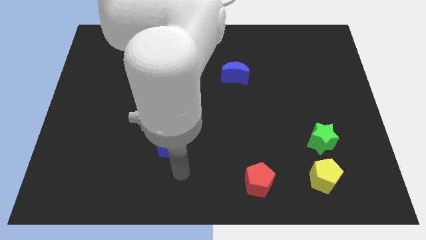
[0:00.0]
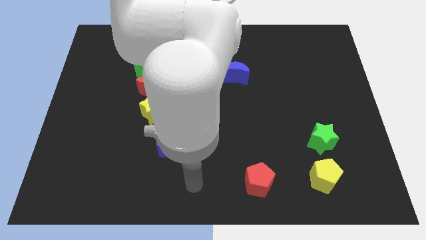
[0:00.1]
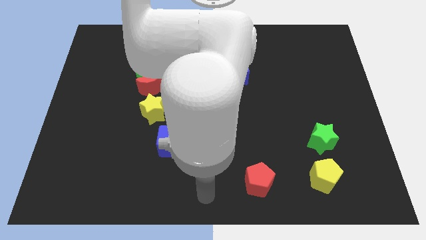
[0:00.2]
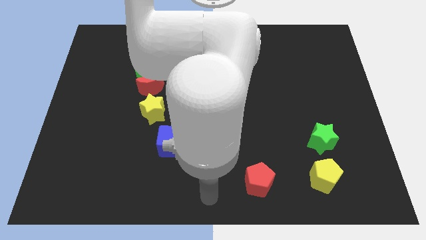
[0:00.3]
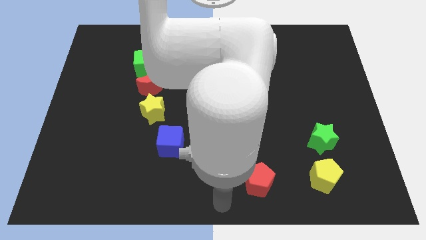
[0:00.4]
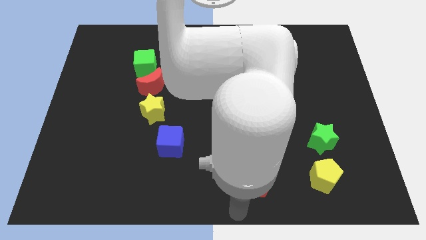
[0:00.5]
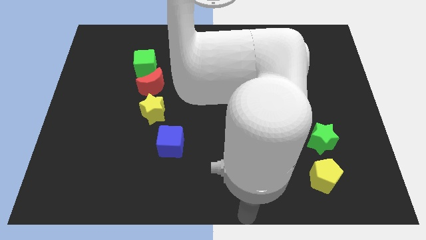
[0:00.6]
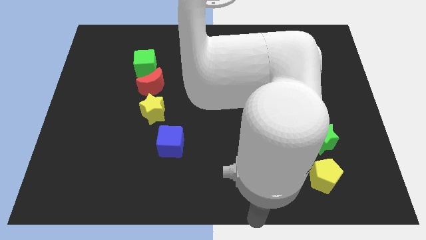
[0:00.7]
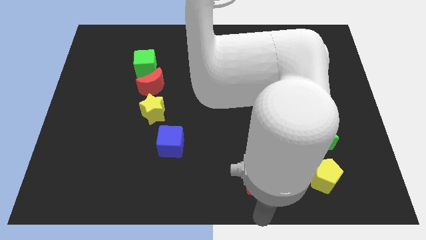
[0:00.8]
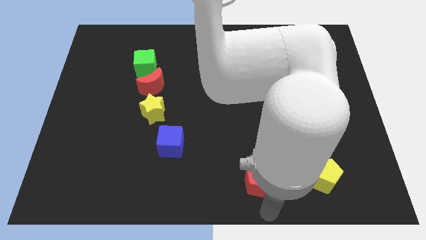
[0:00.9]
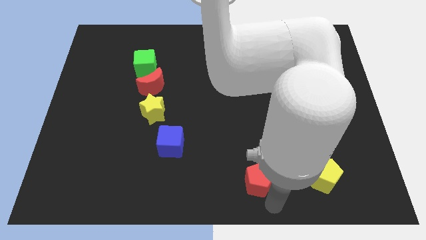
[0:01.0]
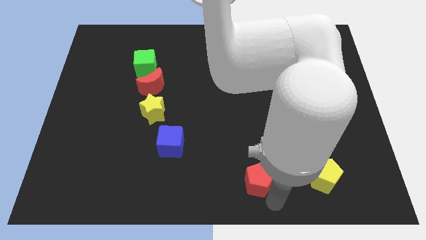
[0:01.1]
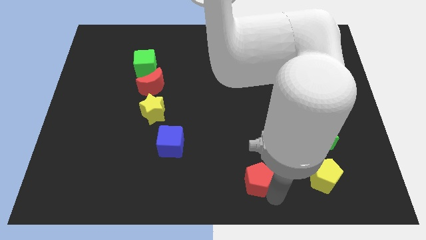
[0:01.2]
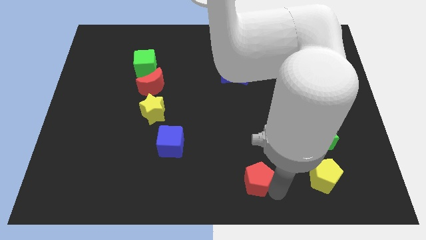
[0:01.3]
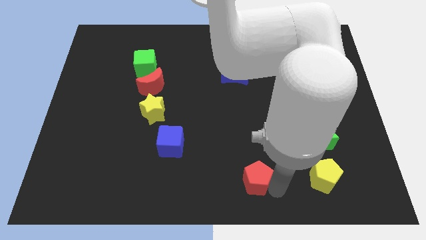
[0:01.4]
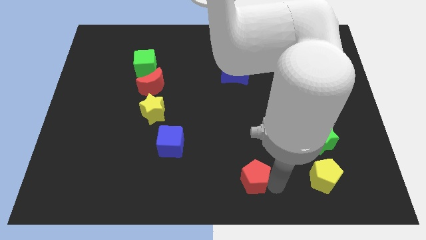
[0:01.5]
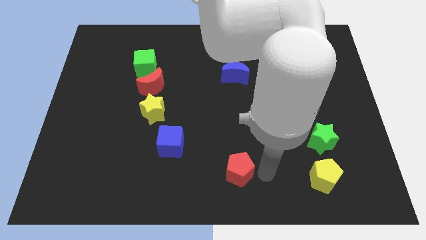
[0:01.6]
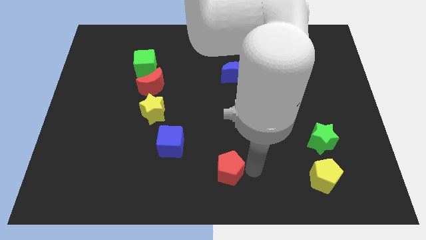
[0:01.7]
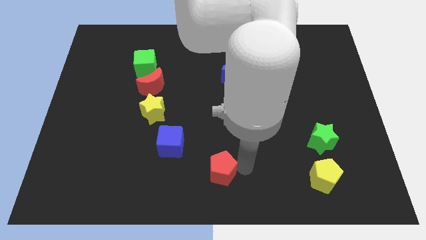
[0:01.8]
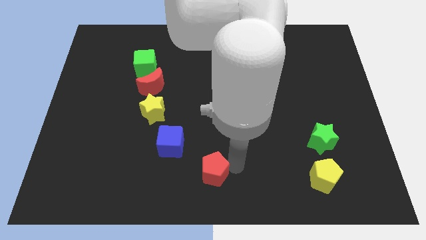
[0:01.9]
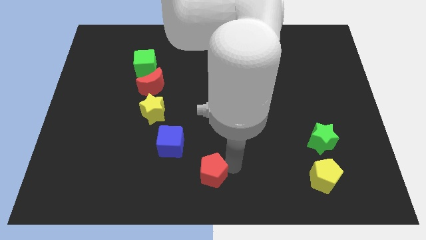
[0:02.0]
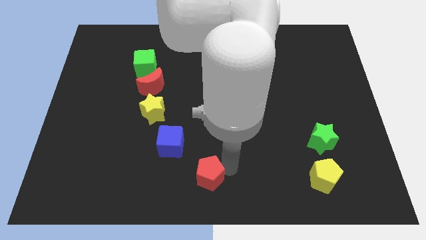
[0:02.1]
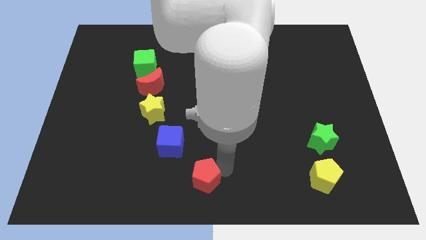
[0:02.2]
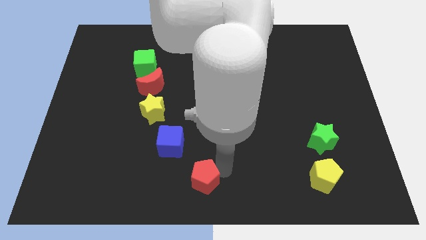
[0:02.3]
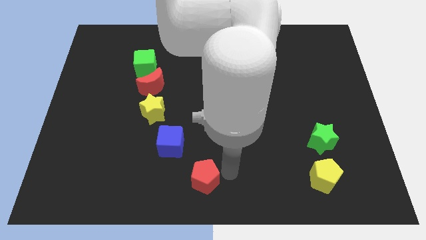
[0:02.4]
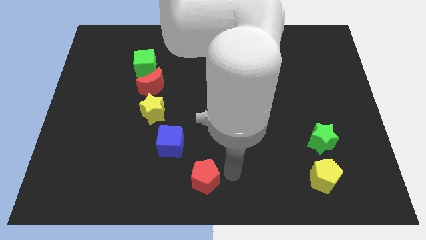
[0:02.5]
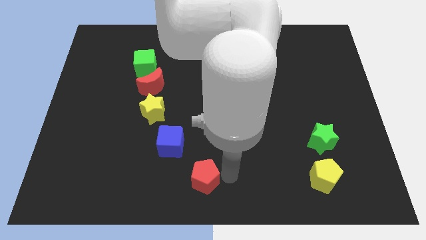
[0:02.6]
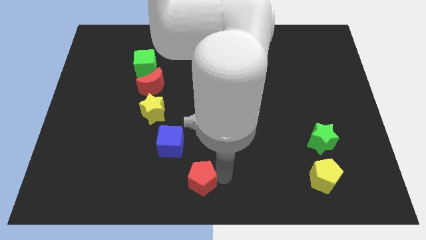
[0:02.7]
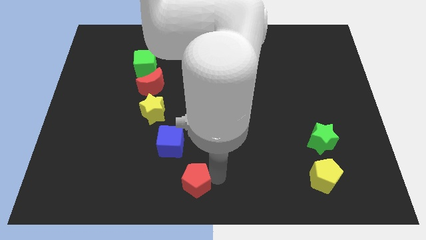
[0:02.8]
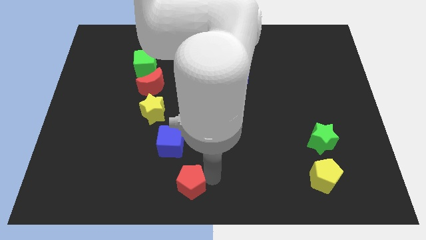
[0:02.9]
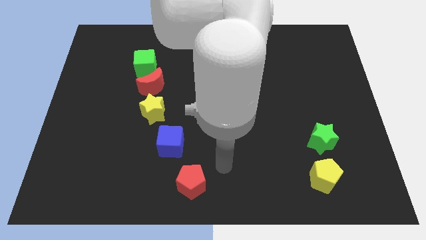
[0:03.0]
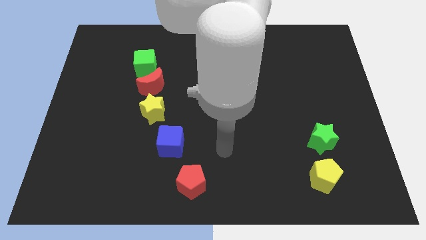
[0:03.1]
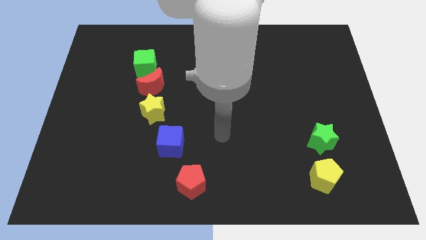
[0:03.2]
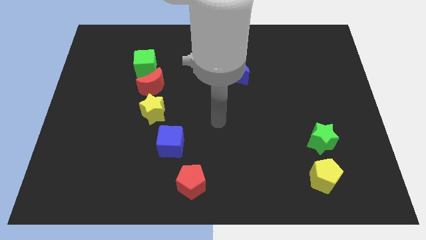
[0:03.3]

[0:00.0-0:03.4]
push the red pentagon to the bottom of the blue cube

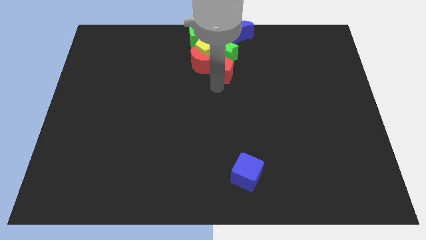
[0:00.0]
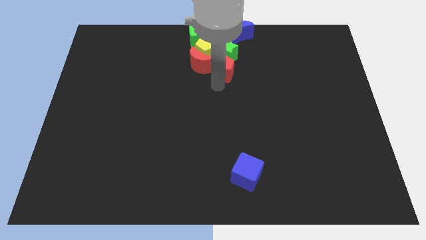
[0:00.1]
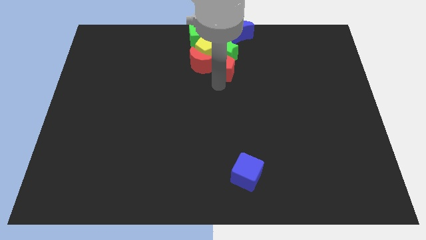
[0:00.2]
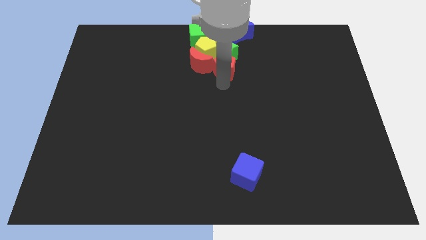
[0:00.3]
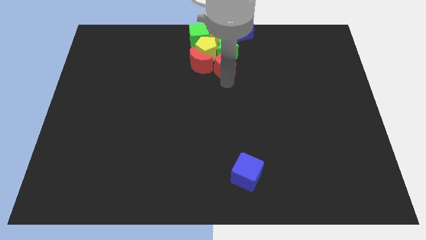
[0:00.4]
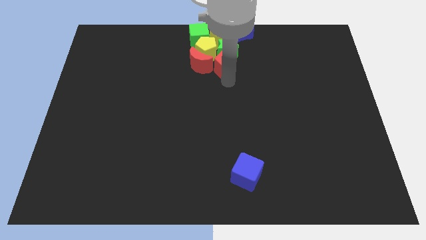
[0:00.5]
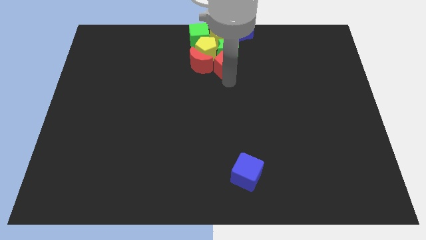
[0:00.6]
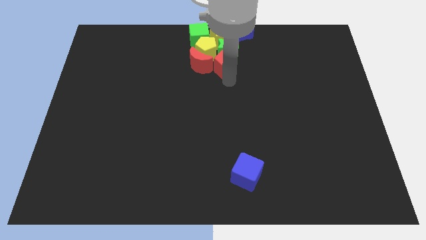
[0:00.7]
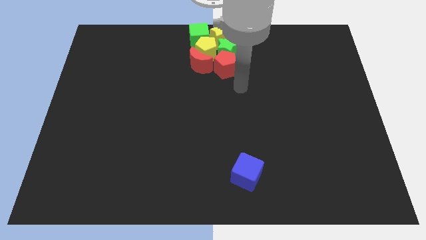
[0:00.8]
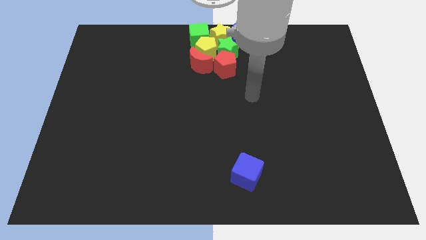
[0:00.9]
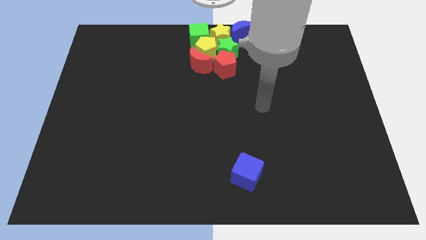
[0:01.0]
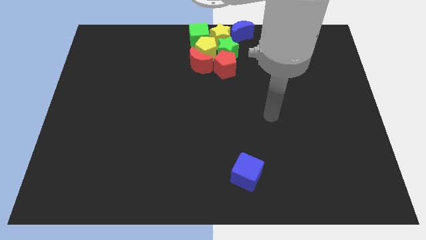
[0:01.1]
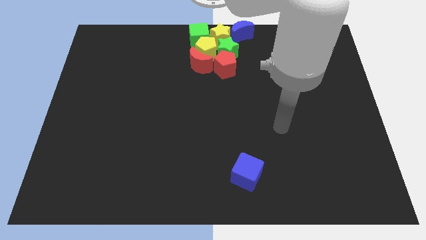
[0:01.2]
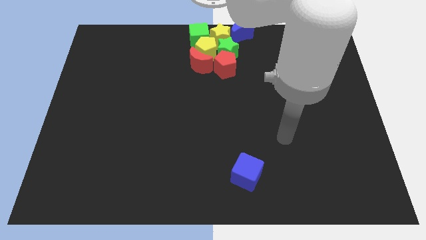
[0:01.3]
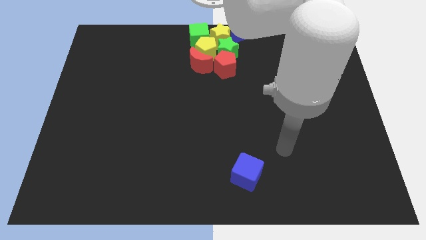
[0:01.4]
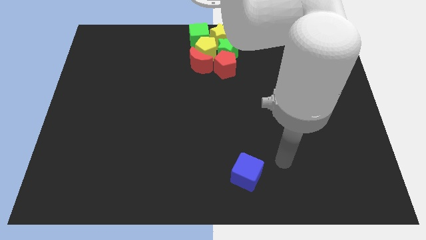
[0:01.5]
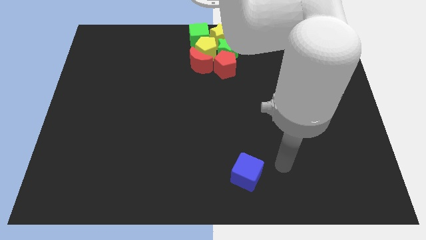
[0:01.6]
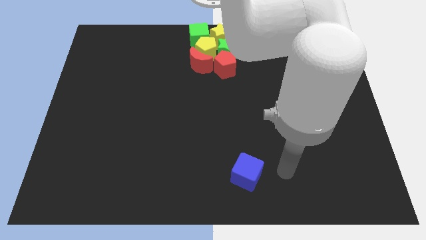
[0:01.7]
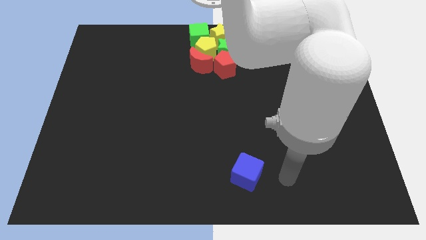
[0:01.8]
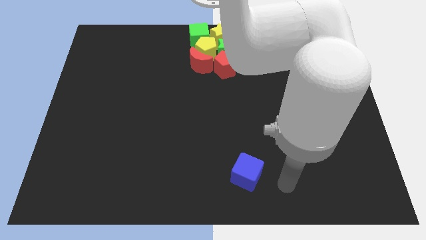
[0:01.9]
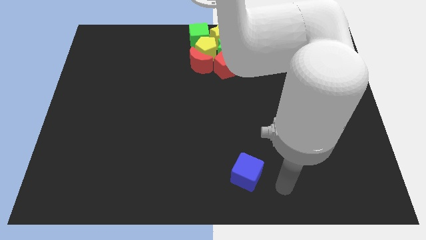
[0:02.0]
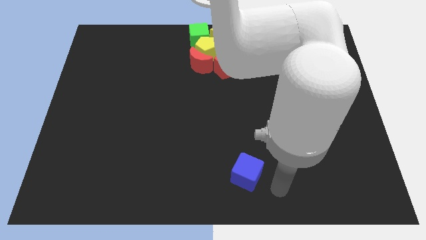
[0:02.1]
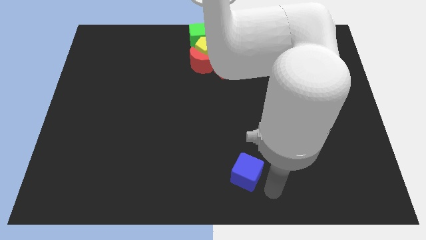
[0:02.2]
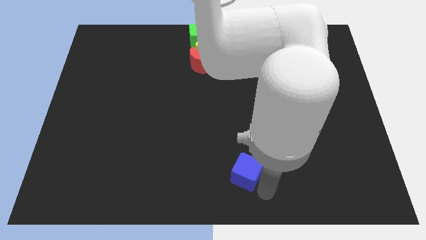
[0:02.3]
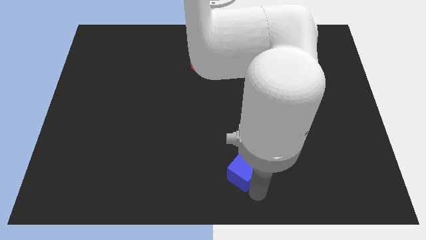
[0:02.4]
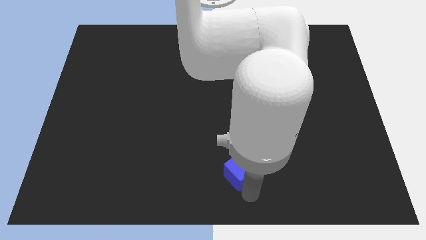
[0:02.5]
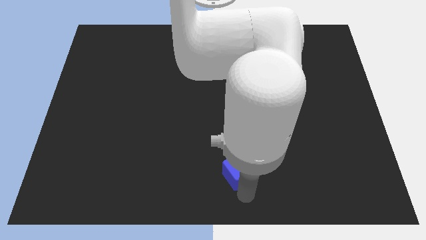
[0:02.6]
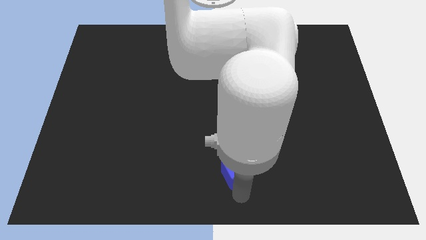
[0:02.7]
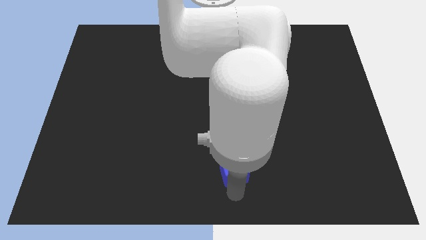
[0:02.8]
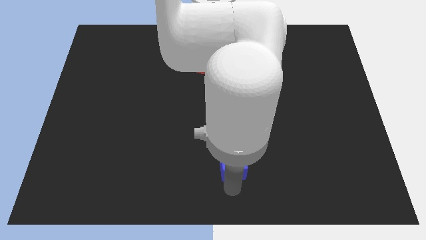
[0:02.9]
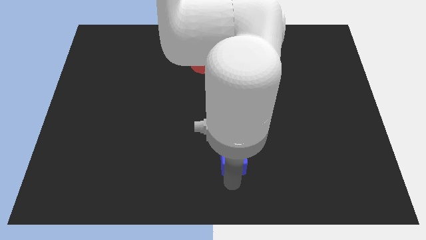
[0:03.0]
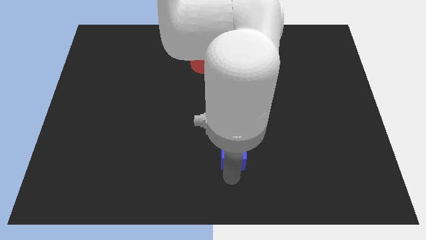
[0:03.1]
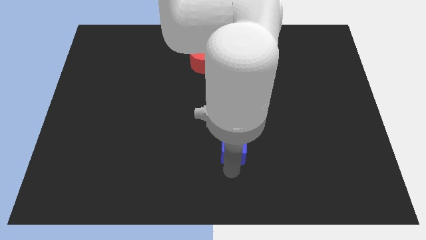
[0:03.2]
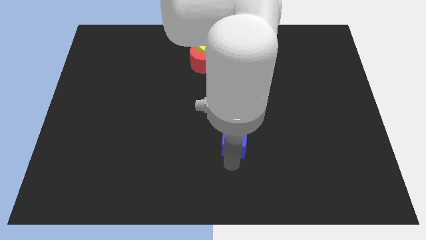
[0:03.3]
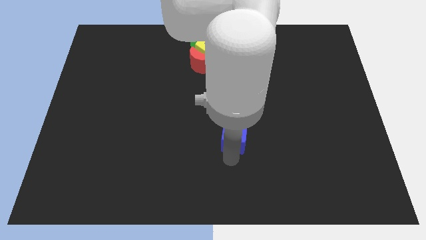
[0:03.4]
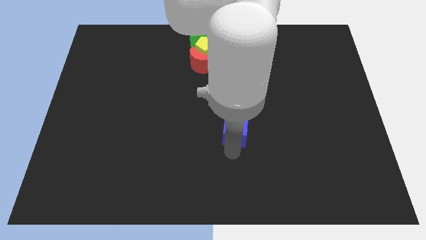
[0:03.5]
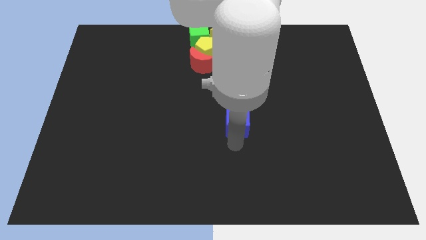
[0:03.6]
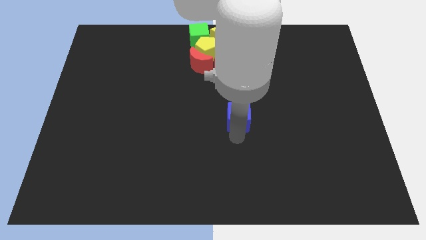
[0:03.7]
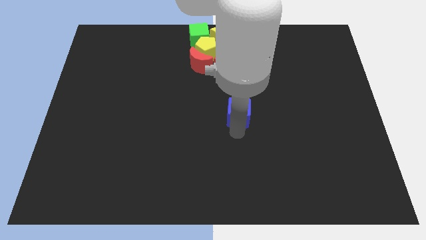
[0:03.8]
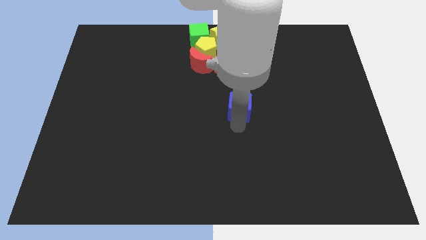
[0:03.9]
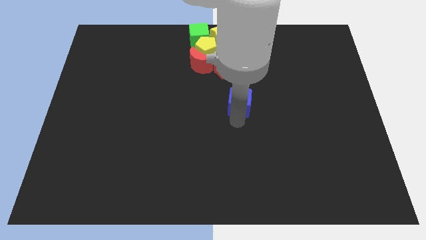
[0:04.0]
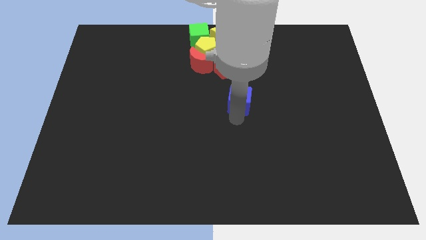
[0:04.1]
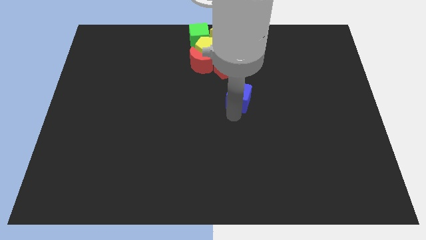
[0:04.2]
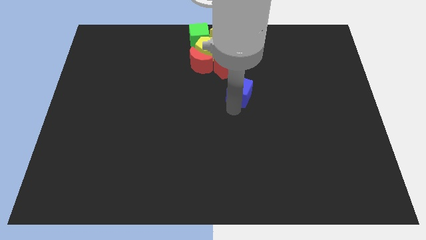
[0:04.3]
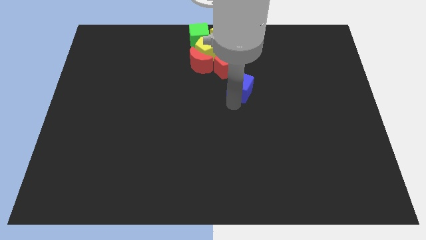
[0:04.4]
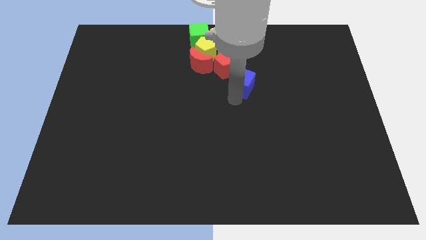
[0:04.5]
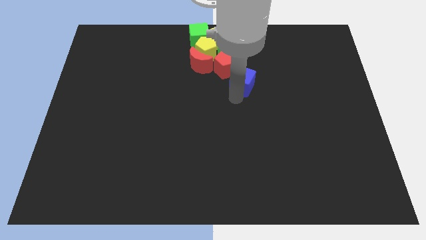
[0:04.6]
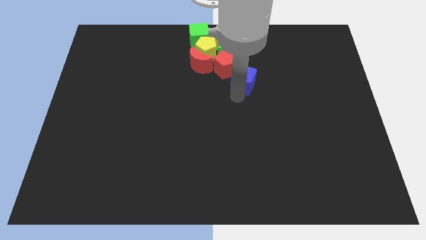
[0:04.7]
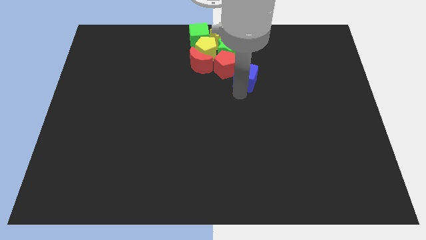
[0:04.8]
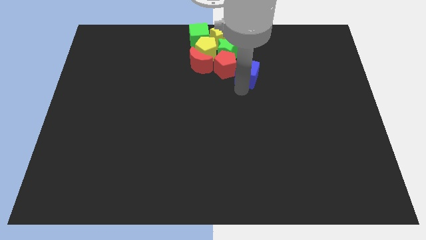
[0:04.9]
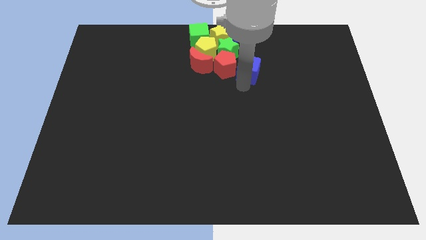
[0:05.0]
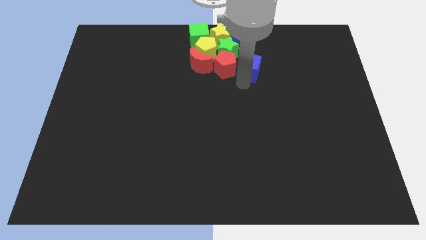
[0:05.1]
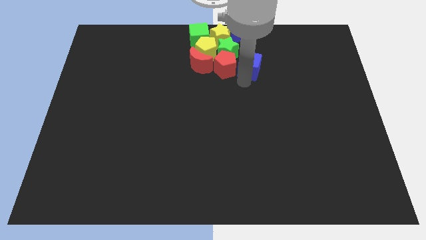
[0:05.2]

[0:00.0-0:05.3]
move the blue cube right to the red pentagon

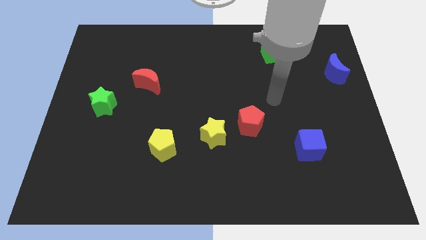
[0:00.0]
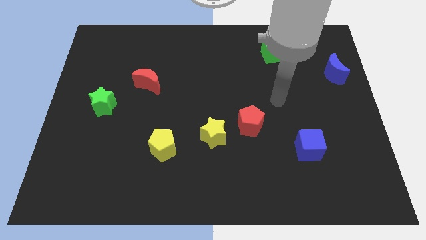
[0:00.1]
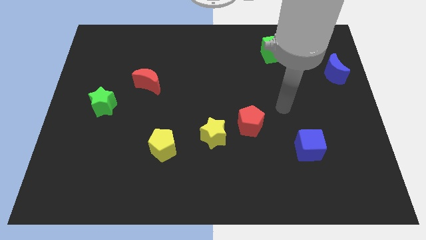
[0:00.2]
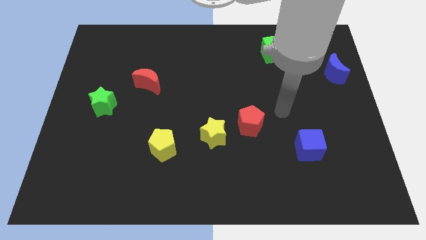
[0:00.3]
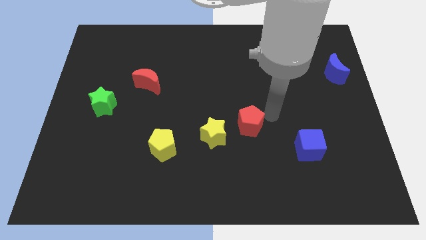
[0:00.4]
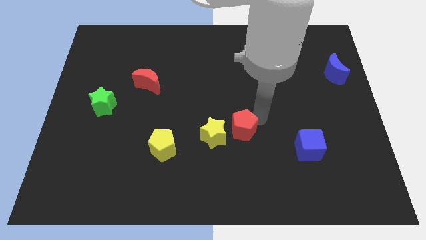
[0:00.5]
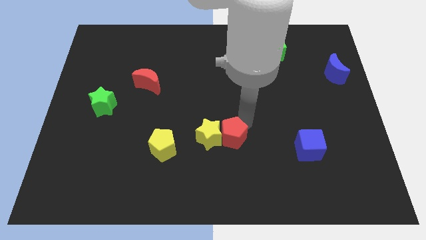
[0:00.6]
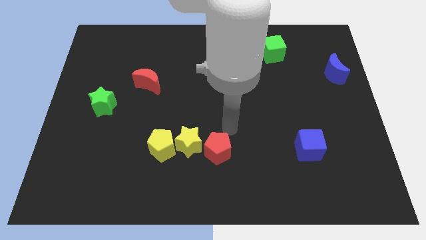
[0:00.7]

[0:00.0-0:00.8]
push yellow star into yellow pentagon with red pentagon
